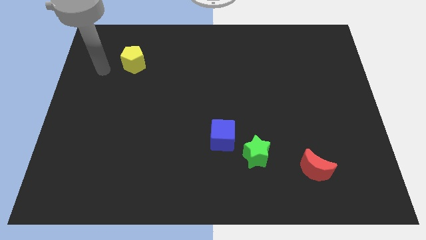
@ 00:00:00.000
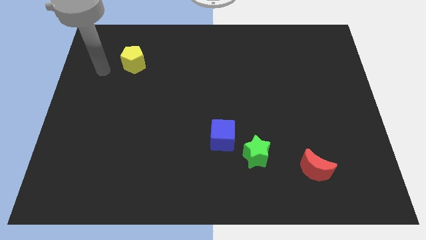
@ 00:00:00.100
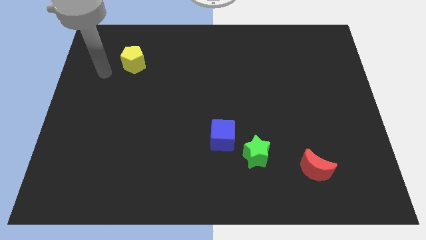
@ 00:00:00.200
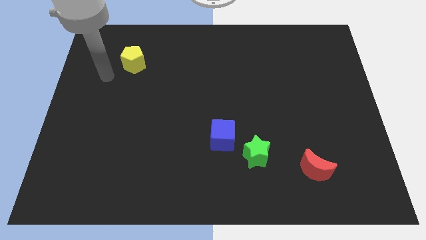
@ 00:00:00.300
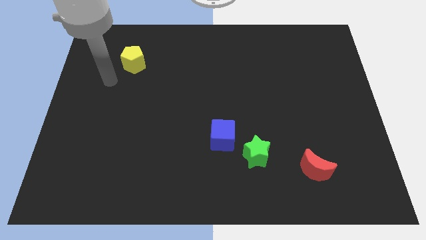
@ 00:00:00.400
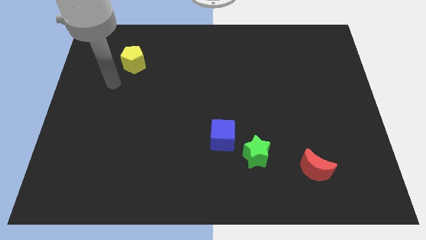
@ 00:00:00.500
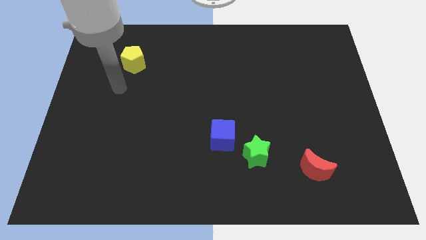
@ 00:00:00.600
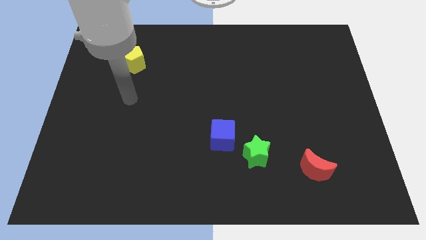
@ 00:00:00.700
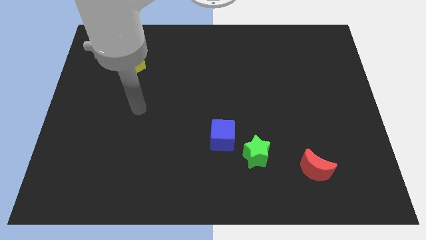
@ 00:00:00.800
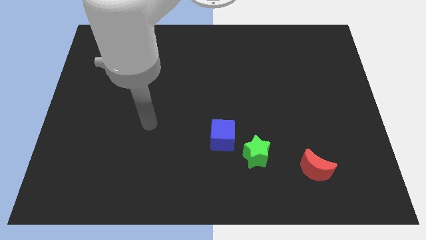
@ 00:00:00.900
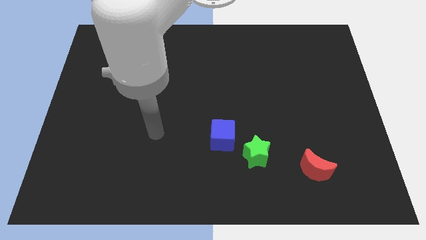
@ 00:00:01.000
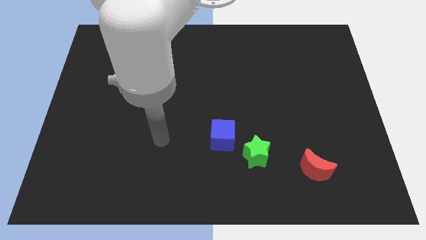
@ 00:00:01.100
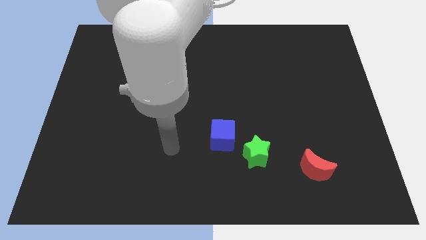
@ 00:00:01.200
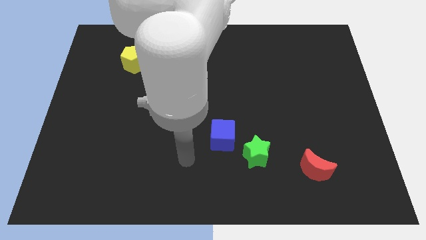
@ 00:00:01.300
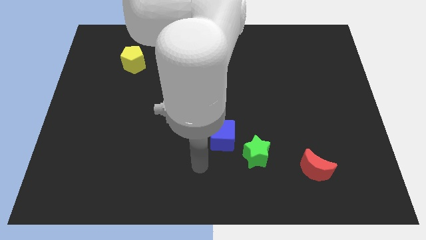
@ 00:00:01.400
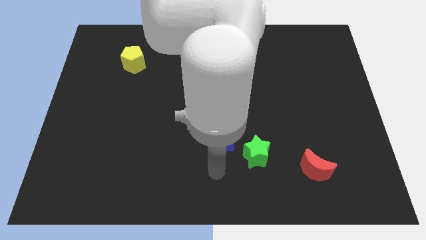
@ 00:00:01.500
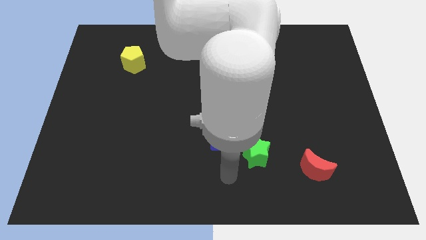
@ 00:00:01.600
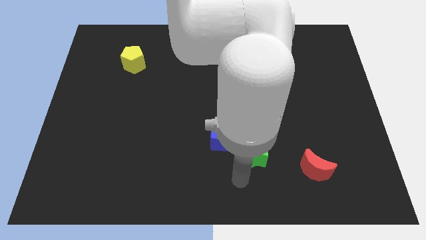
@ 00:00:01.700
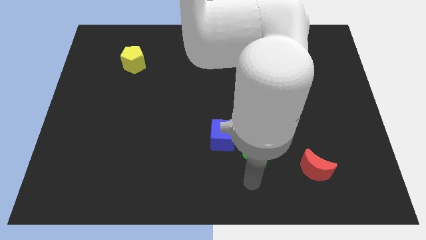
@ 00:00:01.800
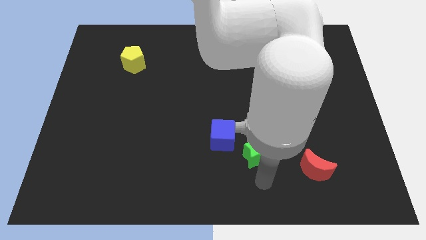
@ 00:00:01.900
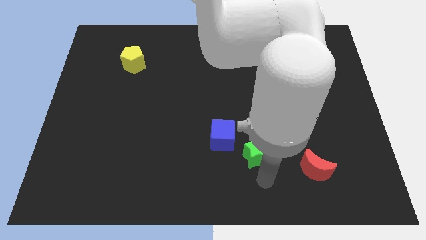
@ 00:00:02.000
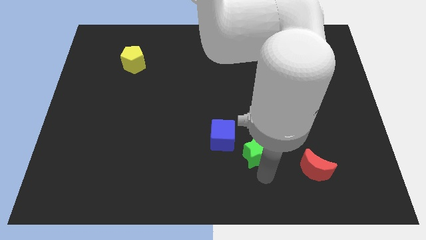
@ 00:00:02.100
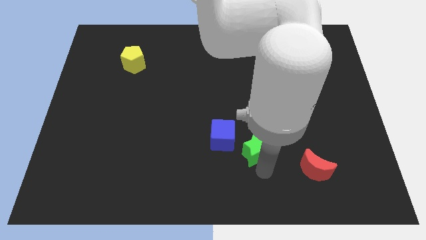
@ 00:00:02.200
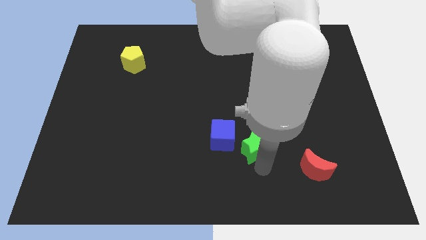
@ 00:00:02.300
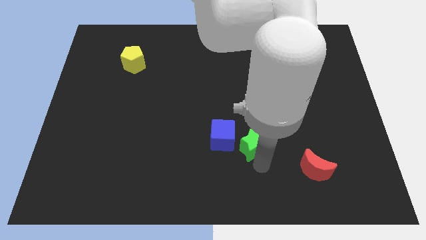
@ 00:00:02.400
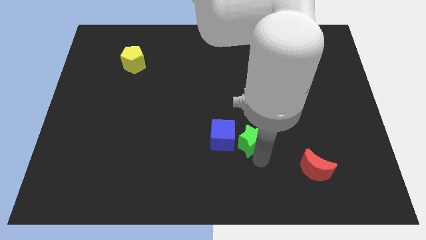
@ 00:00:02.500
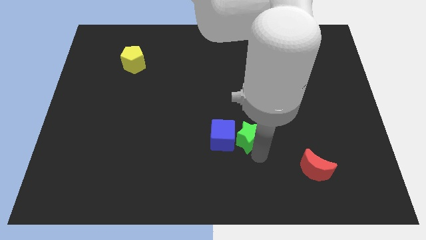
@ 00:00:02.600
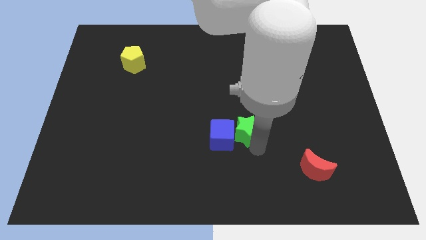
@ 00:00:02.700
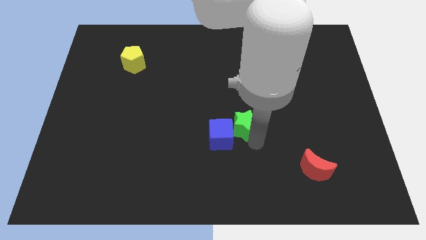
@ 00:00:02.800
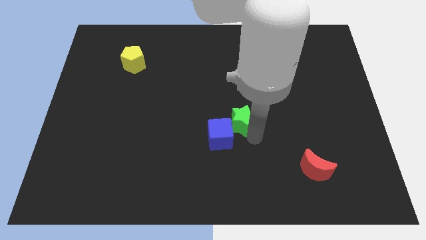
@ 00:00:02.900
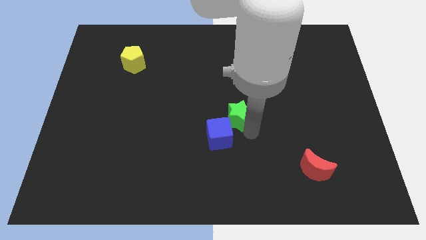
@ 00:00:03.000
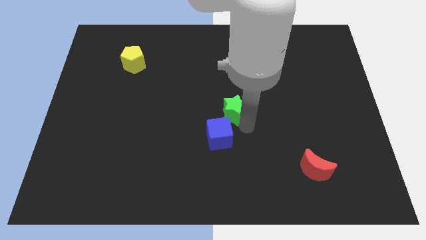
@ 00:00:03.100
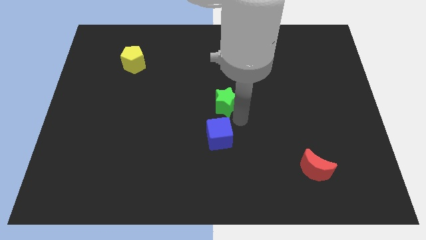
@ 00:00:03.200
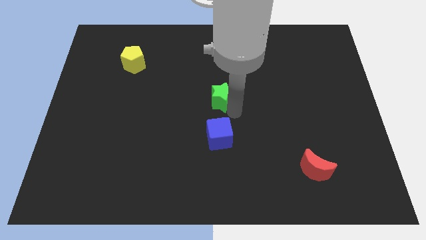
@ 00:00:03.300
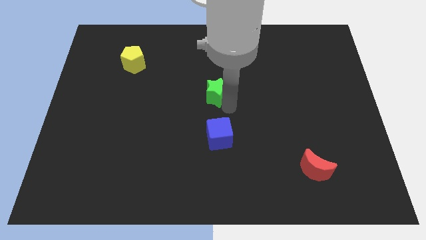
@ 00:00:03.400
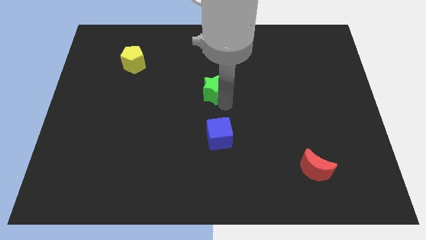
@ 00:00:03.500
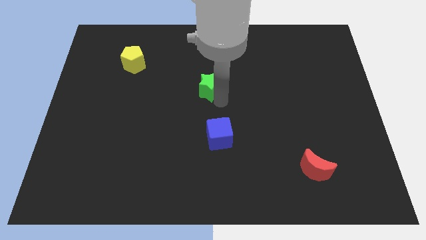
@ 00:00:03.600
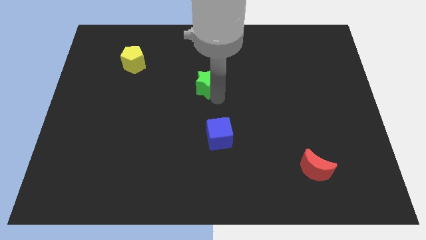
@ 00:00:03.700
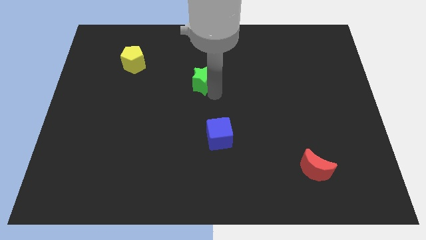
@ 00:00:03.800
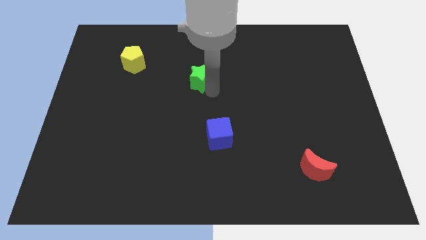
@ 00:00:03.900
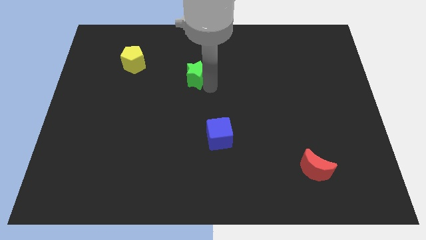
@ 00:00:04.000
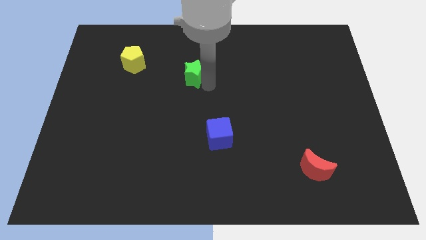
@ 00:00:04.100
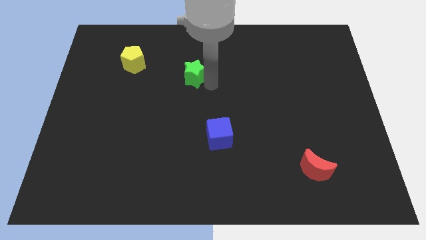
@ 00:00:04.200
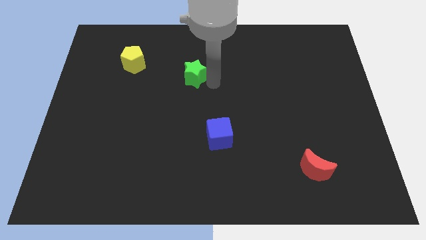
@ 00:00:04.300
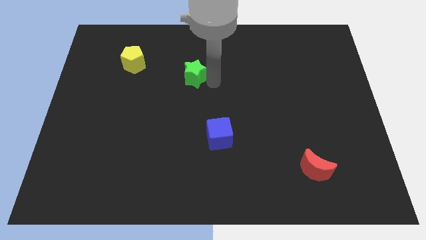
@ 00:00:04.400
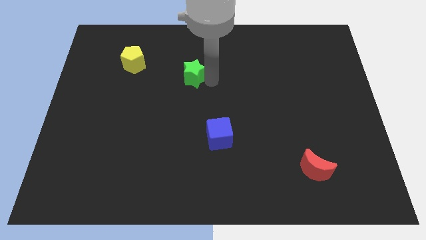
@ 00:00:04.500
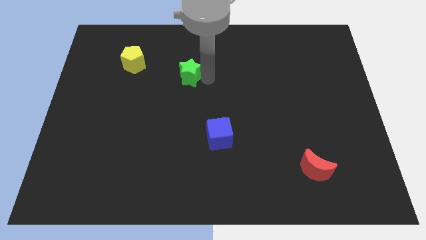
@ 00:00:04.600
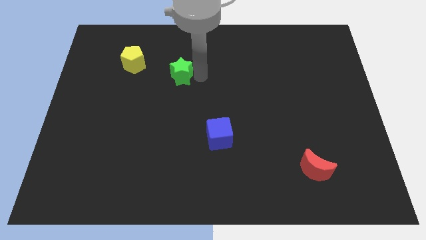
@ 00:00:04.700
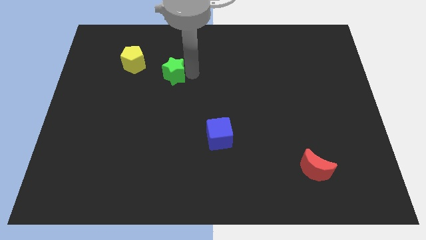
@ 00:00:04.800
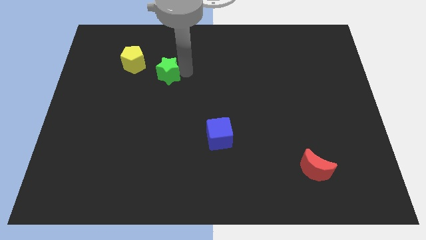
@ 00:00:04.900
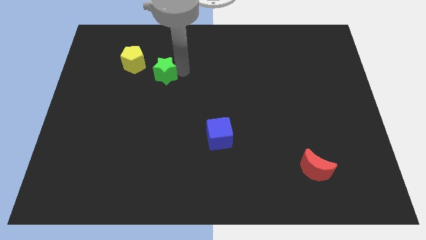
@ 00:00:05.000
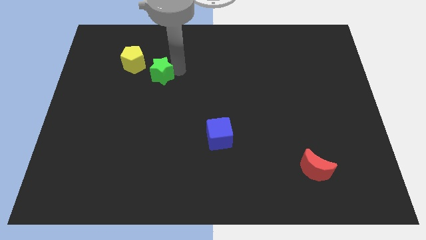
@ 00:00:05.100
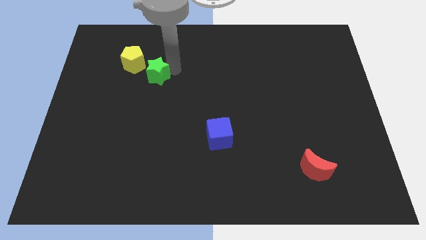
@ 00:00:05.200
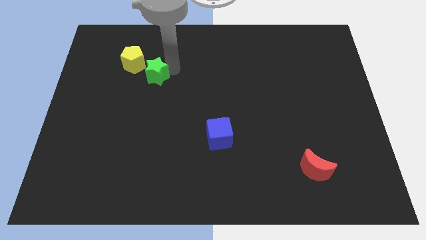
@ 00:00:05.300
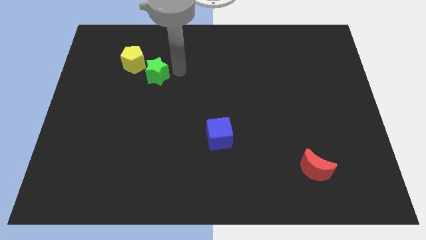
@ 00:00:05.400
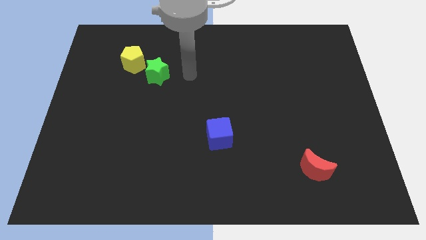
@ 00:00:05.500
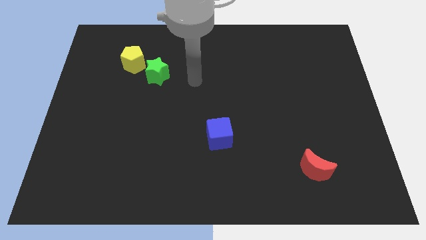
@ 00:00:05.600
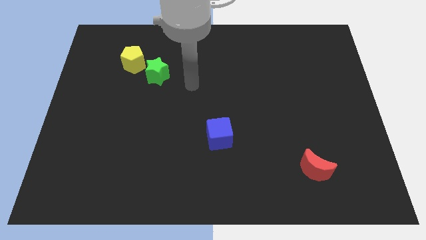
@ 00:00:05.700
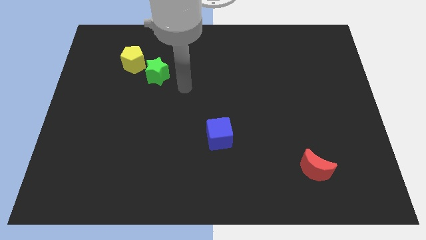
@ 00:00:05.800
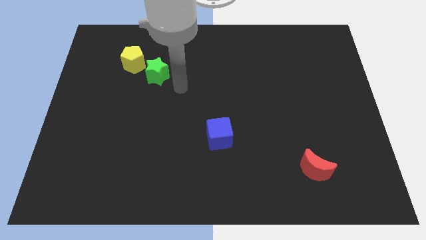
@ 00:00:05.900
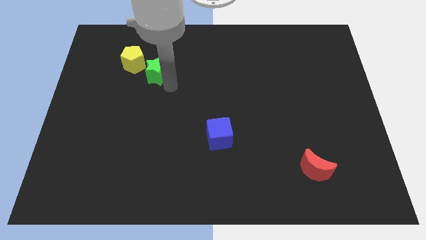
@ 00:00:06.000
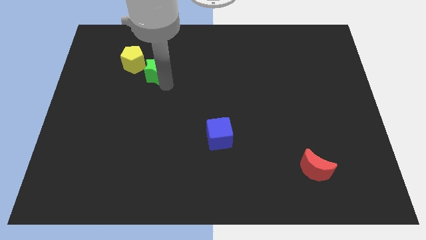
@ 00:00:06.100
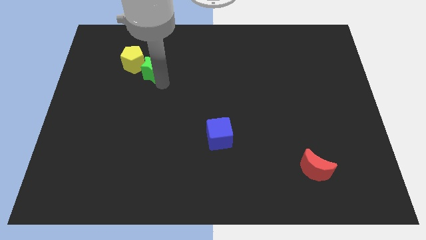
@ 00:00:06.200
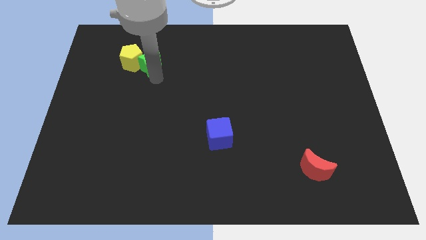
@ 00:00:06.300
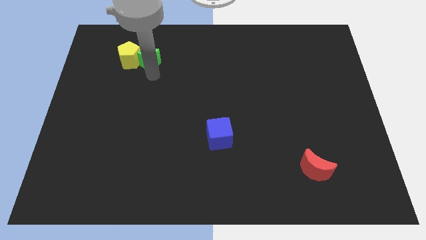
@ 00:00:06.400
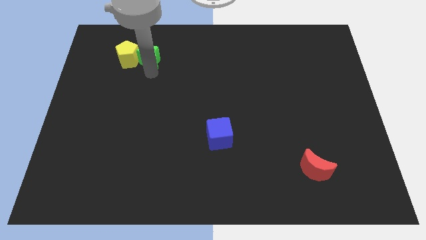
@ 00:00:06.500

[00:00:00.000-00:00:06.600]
move the star next to the yellow block

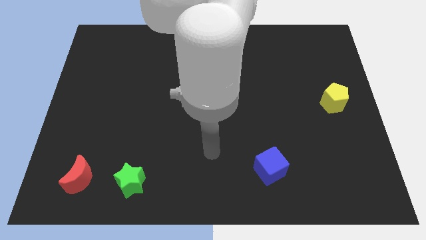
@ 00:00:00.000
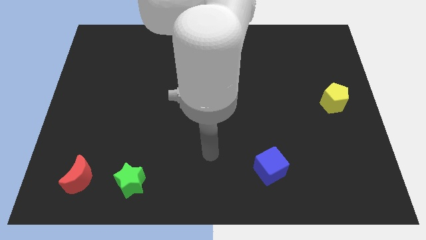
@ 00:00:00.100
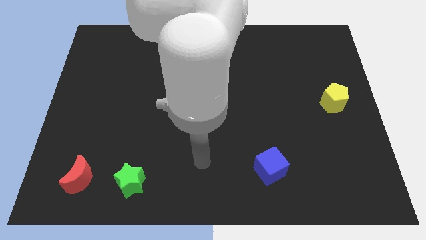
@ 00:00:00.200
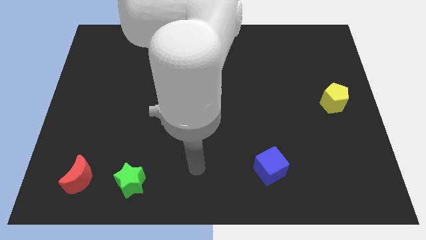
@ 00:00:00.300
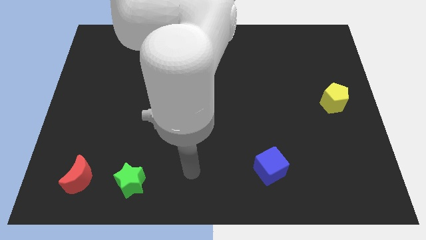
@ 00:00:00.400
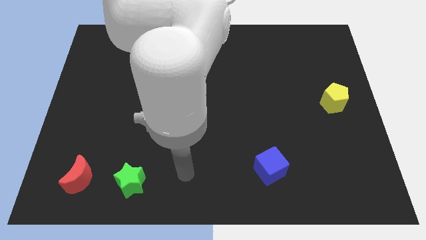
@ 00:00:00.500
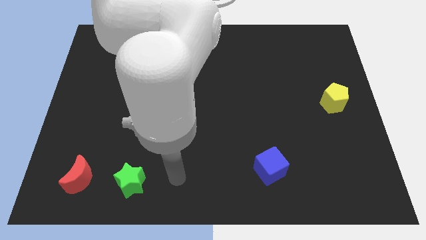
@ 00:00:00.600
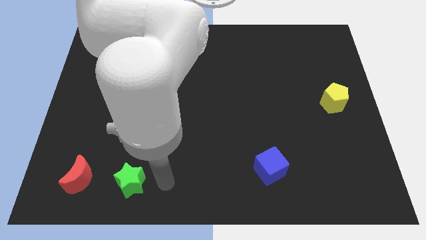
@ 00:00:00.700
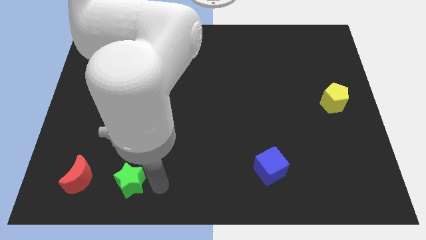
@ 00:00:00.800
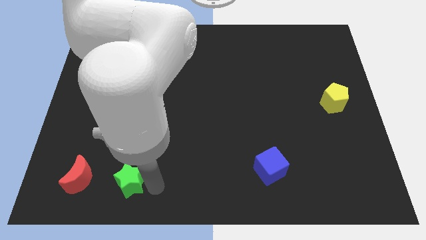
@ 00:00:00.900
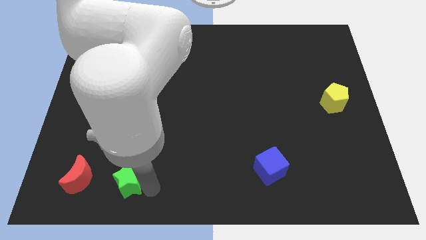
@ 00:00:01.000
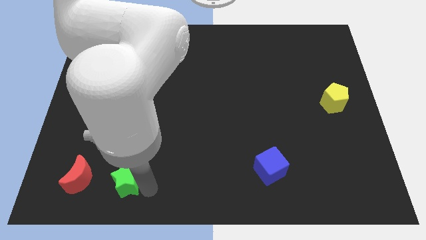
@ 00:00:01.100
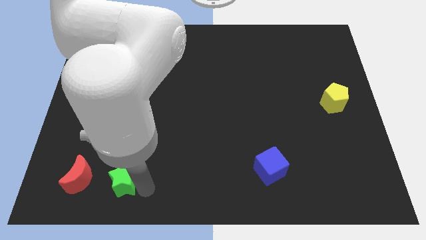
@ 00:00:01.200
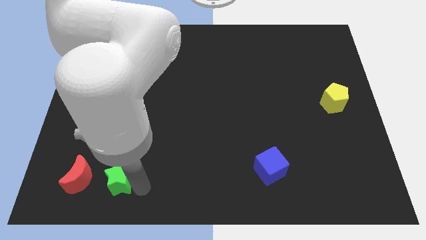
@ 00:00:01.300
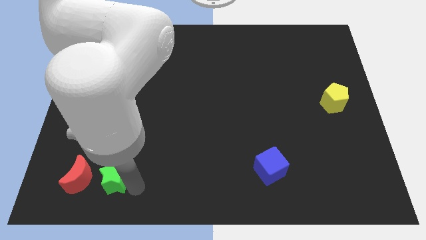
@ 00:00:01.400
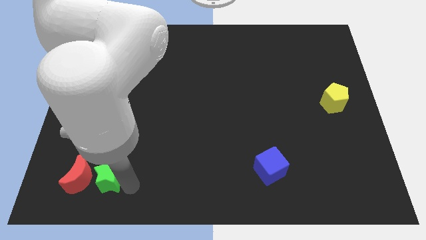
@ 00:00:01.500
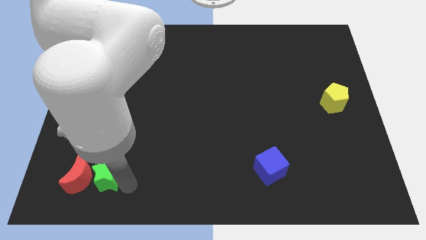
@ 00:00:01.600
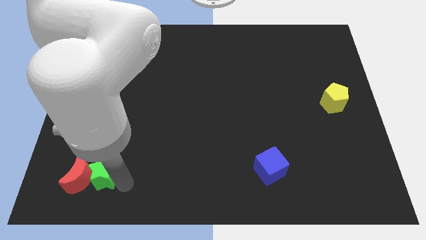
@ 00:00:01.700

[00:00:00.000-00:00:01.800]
move the star close to the moon
